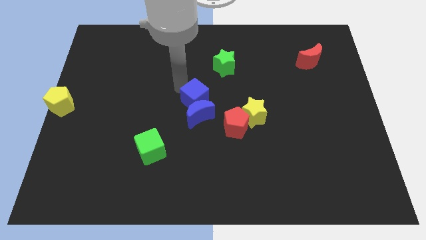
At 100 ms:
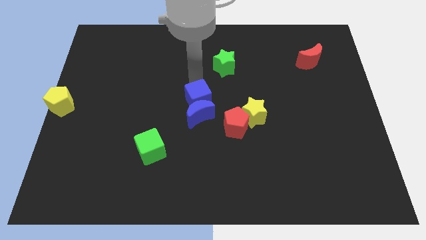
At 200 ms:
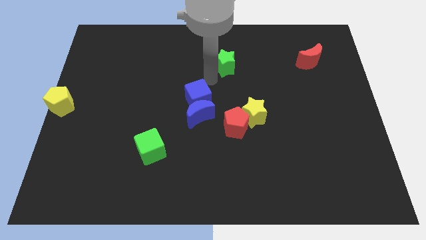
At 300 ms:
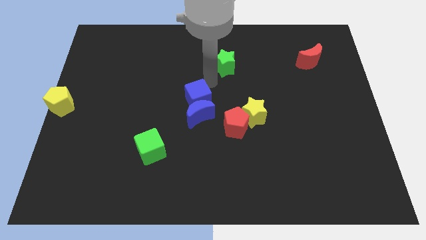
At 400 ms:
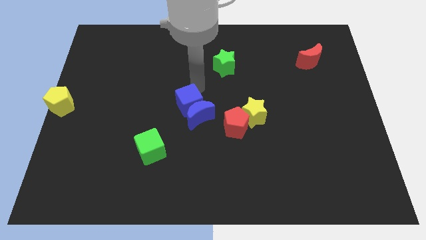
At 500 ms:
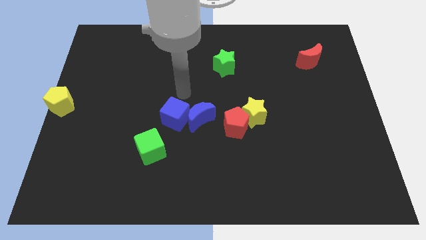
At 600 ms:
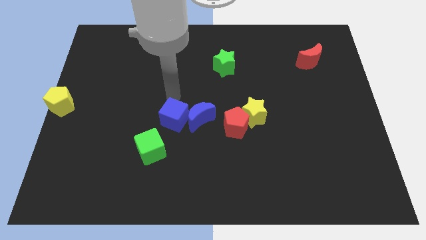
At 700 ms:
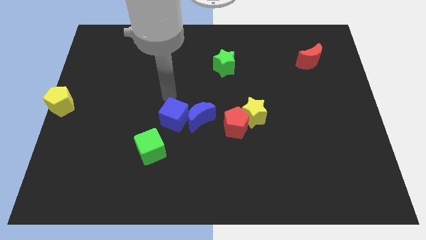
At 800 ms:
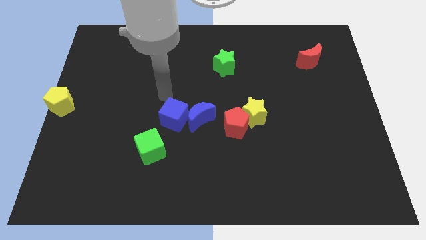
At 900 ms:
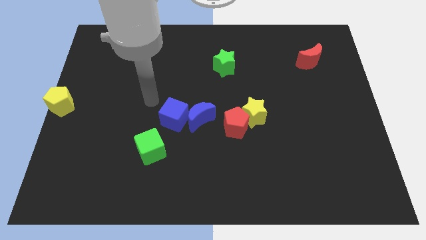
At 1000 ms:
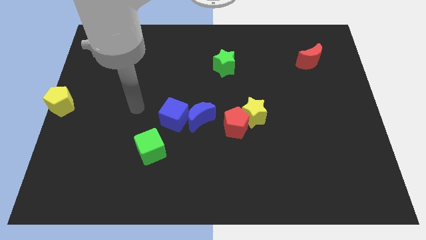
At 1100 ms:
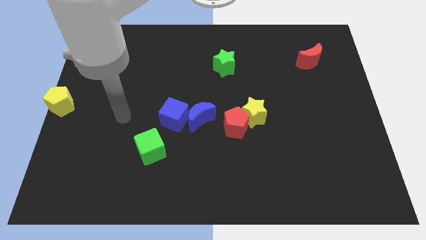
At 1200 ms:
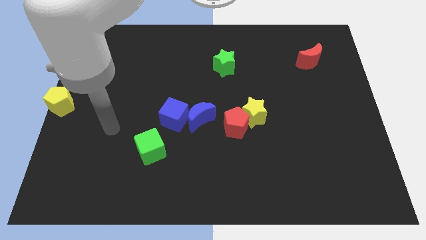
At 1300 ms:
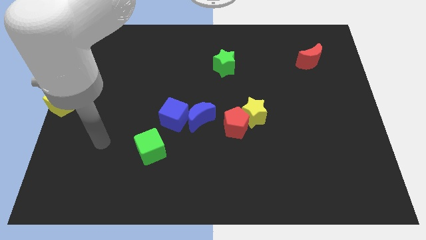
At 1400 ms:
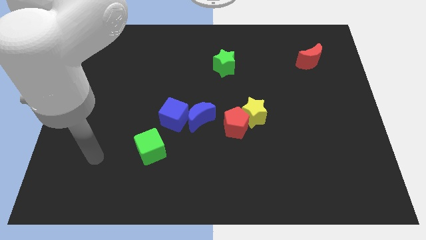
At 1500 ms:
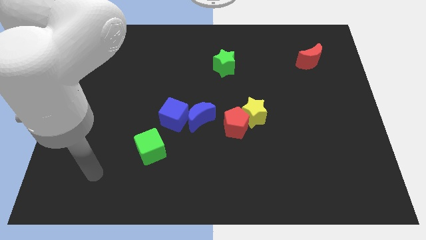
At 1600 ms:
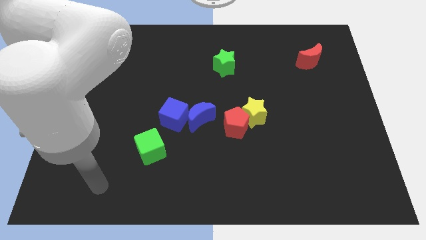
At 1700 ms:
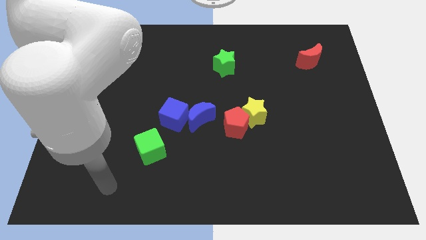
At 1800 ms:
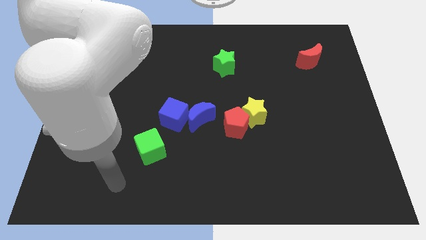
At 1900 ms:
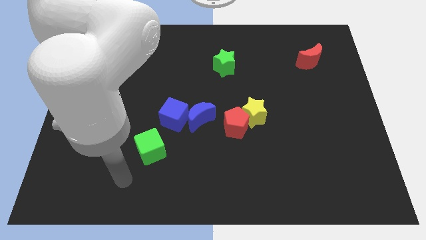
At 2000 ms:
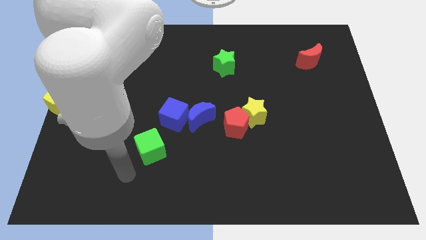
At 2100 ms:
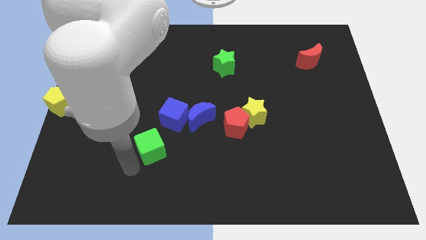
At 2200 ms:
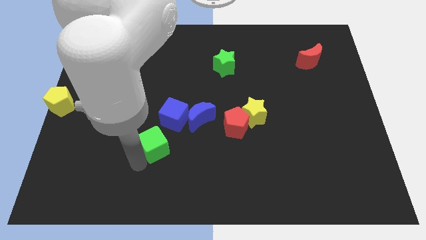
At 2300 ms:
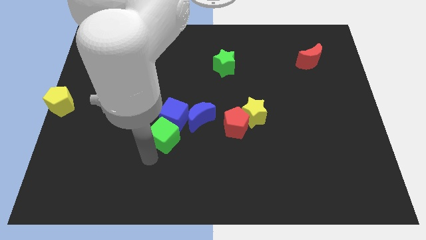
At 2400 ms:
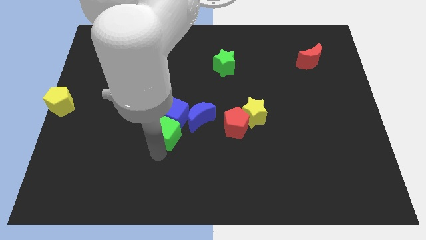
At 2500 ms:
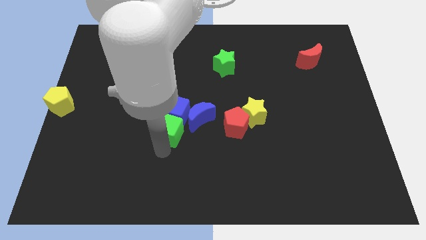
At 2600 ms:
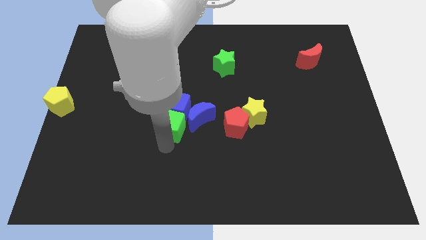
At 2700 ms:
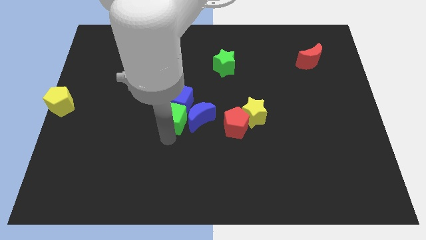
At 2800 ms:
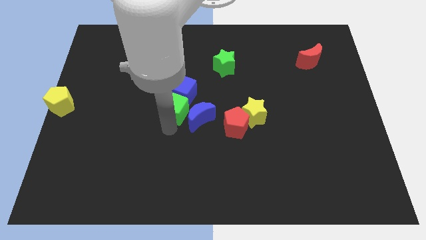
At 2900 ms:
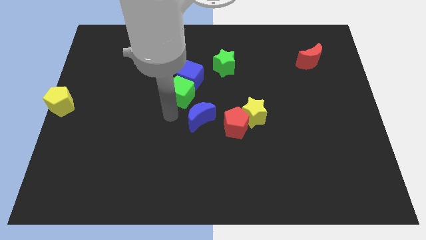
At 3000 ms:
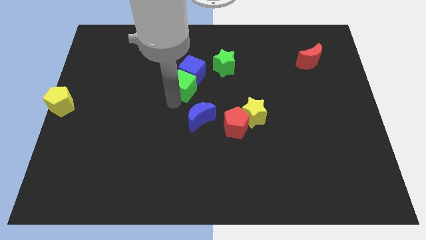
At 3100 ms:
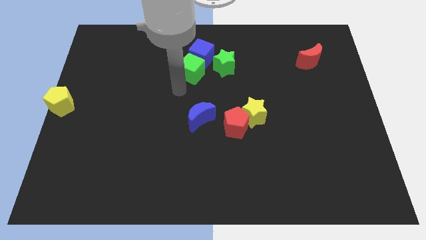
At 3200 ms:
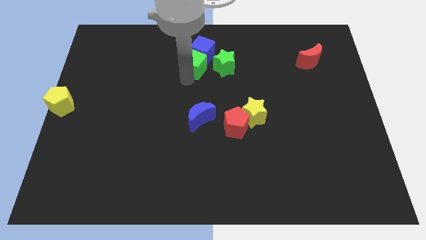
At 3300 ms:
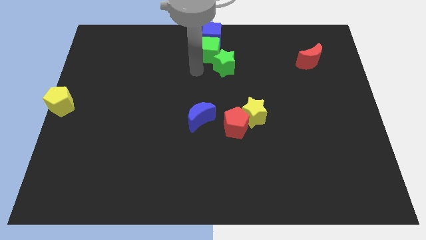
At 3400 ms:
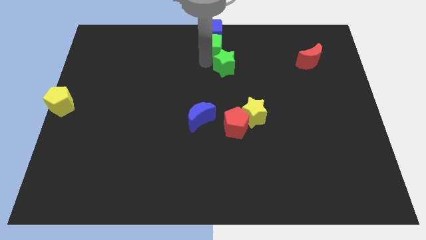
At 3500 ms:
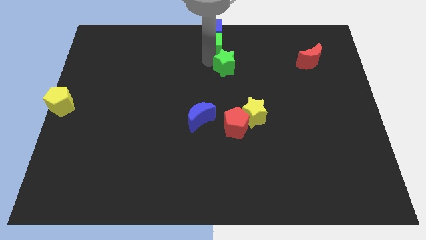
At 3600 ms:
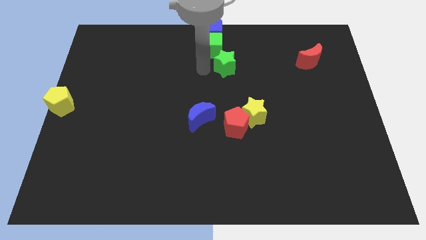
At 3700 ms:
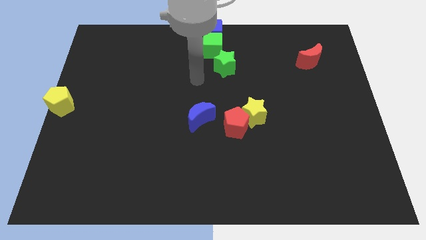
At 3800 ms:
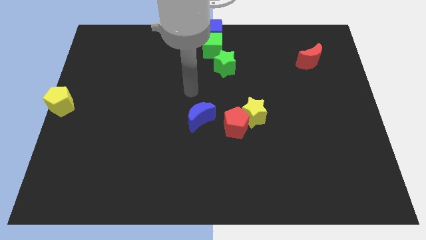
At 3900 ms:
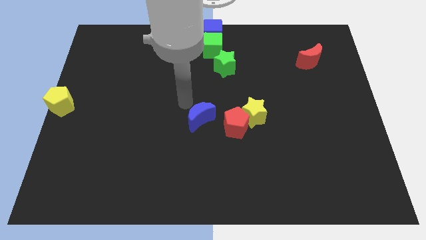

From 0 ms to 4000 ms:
push both green cube and blue cube to top center of the board

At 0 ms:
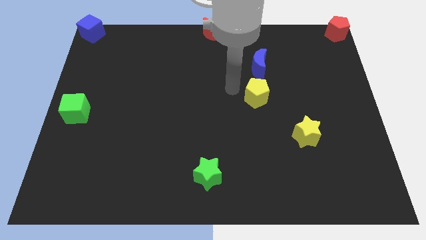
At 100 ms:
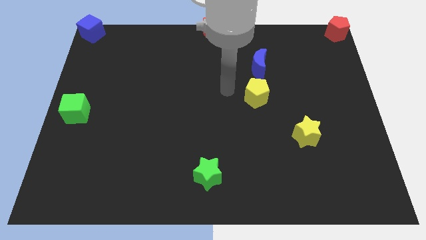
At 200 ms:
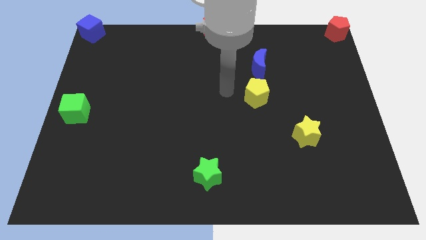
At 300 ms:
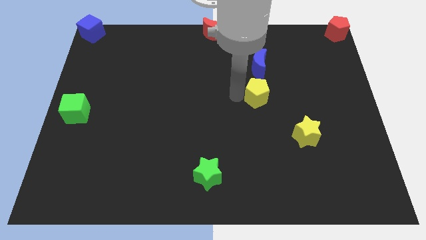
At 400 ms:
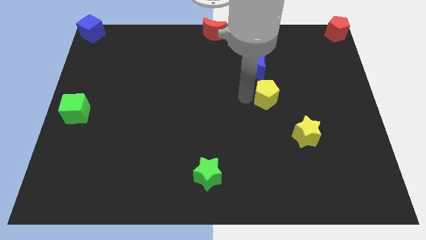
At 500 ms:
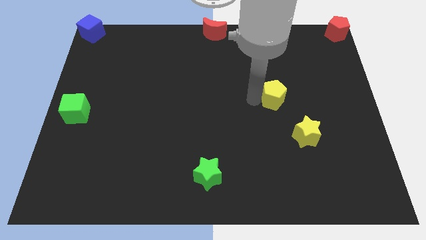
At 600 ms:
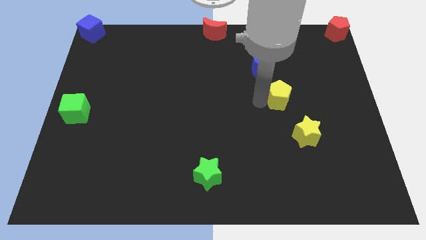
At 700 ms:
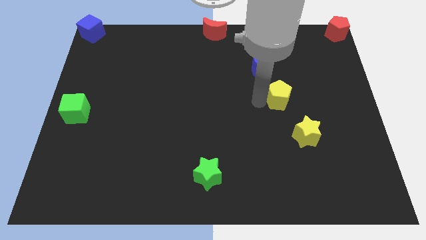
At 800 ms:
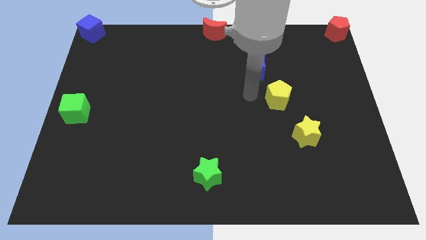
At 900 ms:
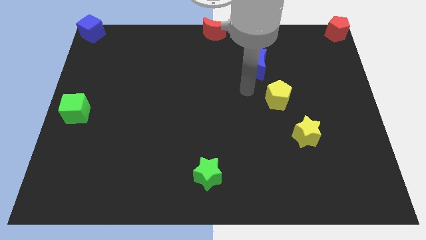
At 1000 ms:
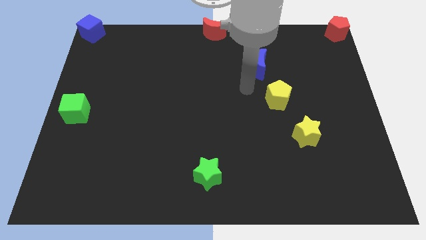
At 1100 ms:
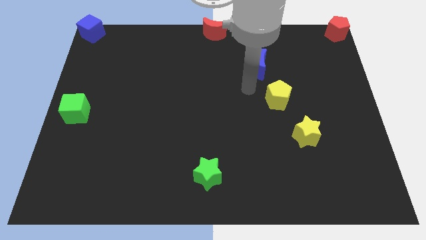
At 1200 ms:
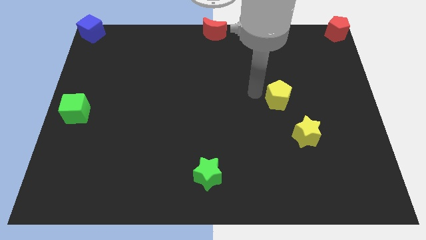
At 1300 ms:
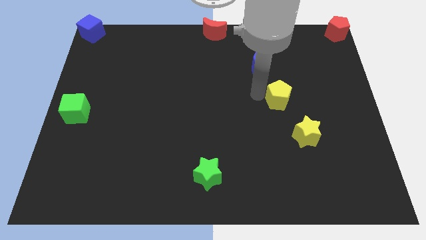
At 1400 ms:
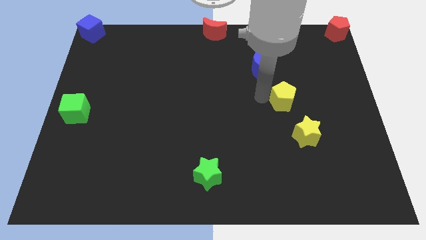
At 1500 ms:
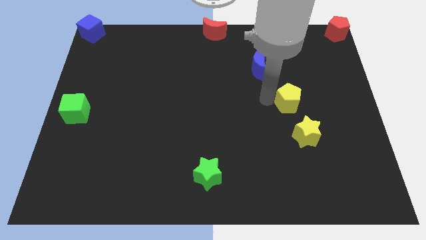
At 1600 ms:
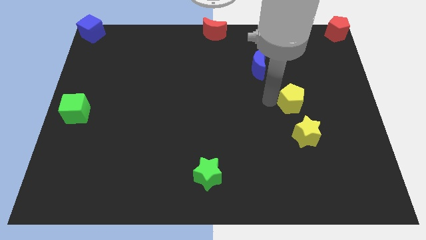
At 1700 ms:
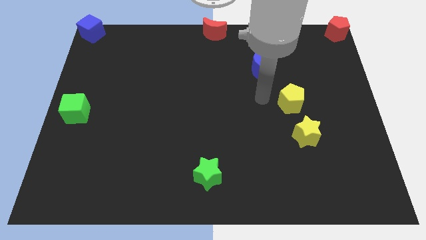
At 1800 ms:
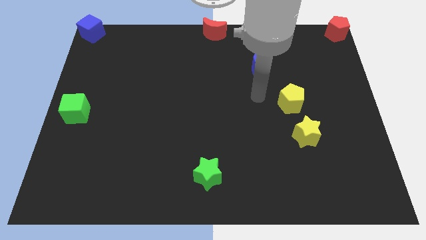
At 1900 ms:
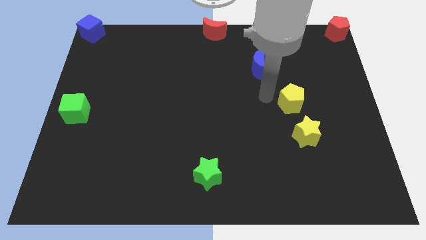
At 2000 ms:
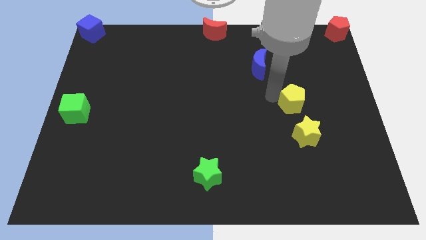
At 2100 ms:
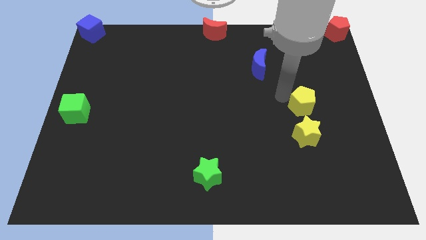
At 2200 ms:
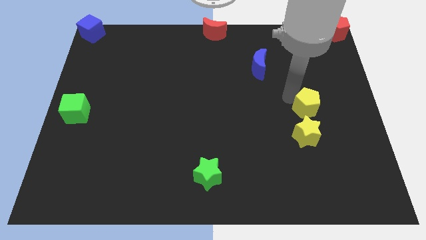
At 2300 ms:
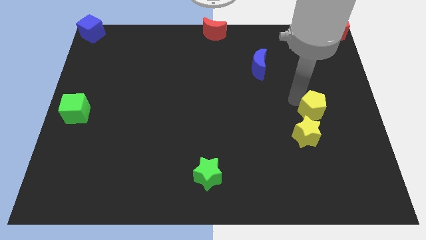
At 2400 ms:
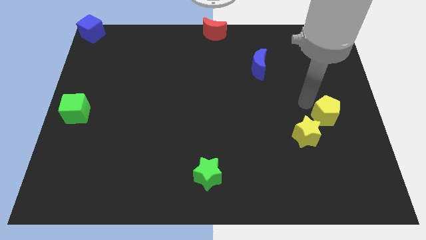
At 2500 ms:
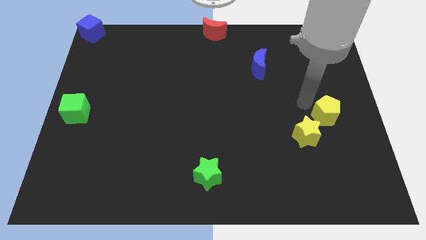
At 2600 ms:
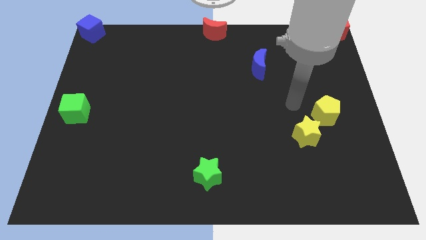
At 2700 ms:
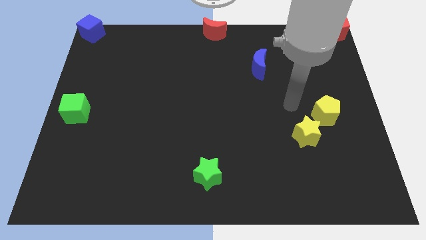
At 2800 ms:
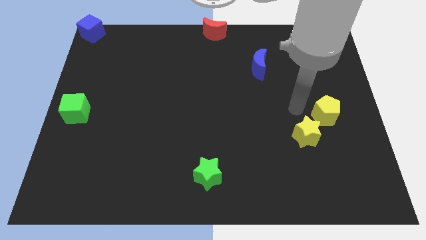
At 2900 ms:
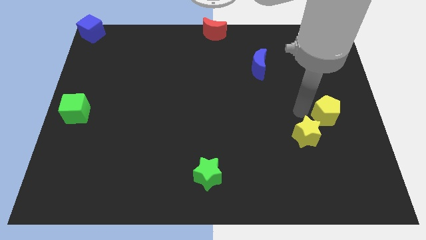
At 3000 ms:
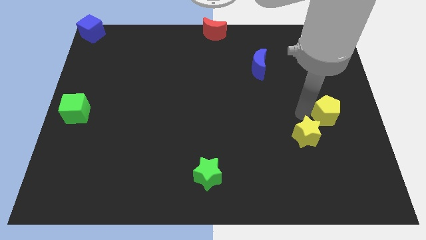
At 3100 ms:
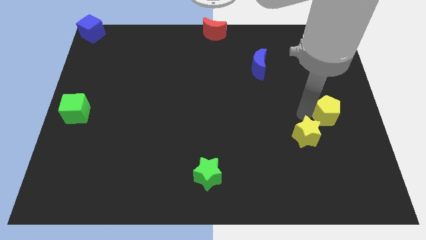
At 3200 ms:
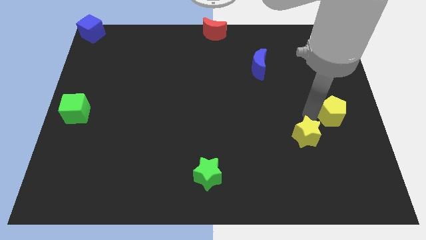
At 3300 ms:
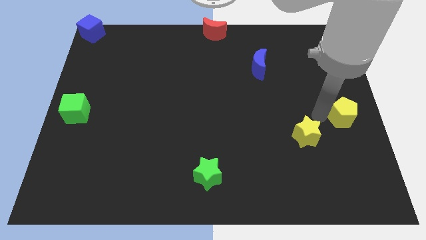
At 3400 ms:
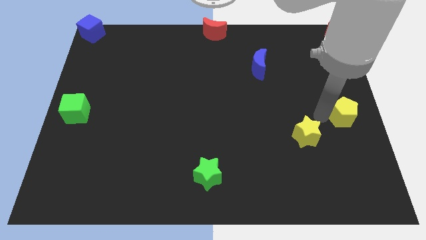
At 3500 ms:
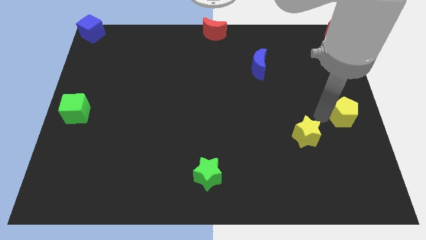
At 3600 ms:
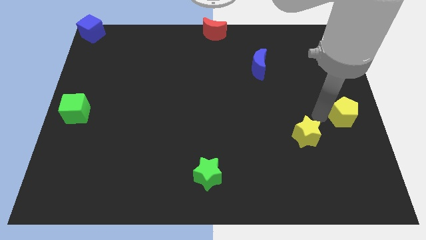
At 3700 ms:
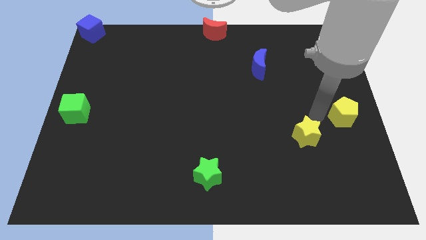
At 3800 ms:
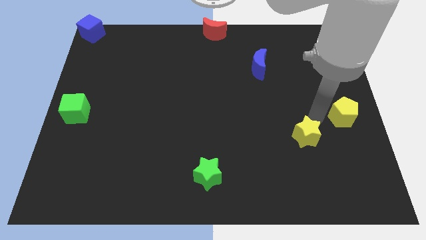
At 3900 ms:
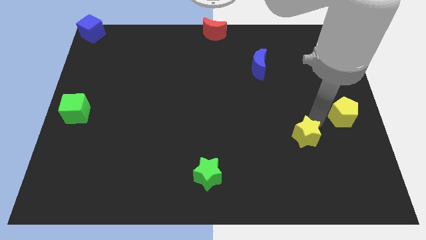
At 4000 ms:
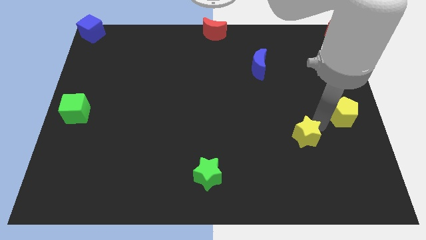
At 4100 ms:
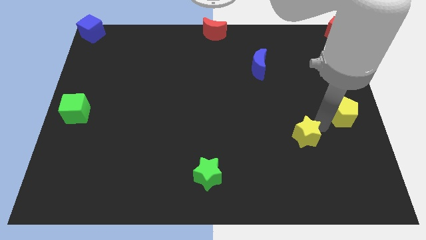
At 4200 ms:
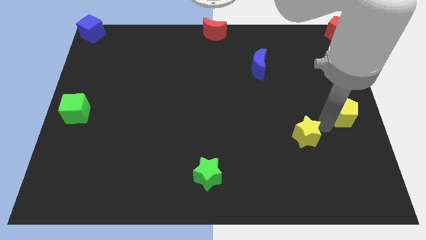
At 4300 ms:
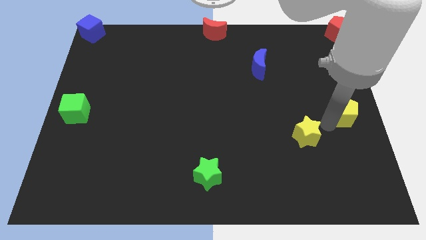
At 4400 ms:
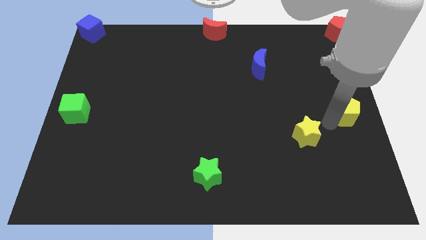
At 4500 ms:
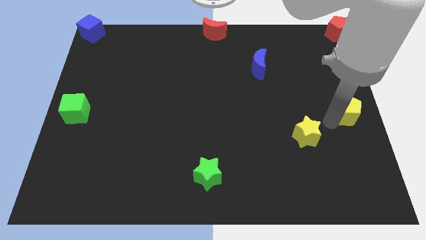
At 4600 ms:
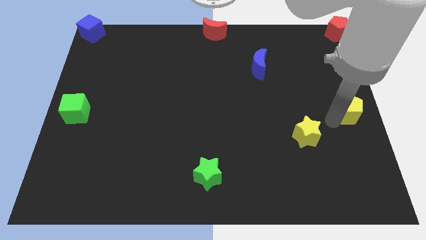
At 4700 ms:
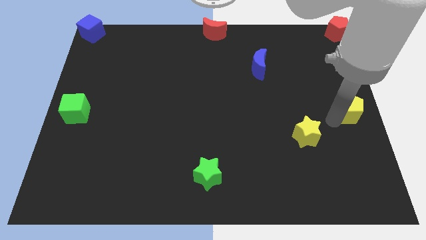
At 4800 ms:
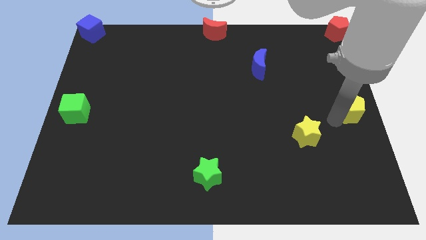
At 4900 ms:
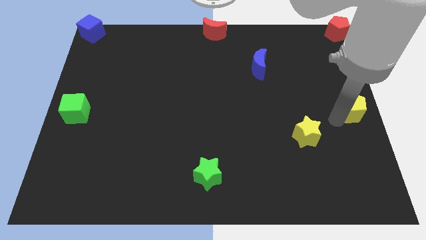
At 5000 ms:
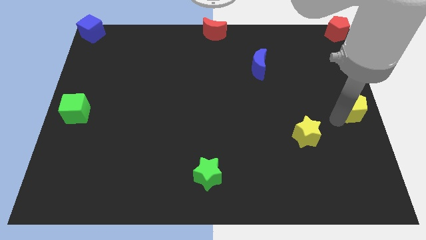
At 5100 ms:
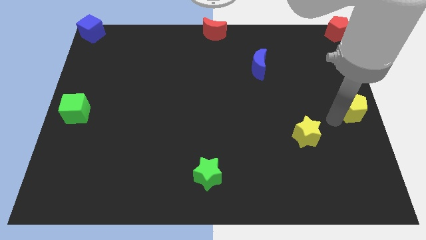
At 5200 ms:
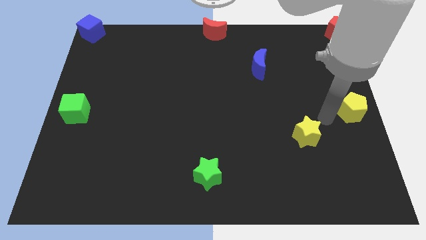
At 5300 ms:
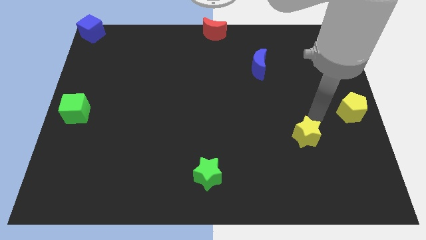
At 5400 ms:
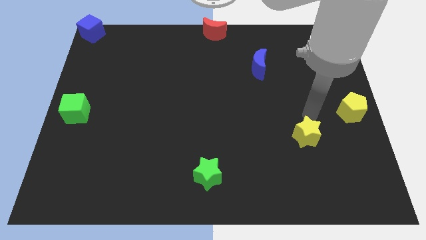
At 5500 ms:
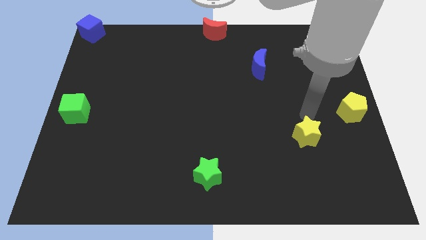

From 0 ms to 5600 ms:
slide the yellow pentagon towards the right side of the board
